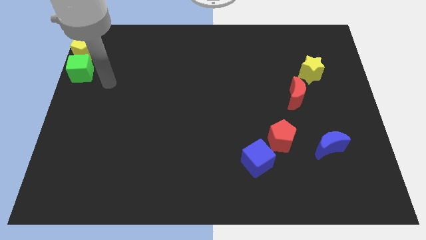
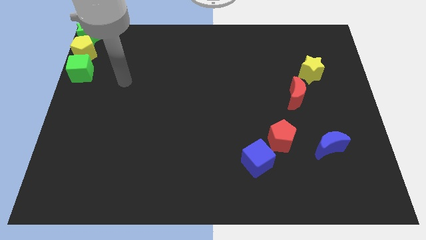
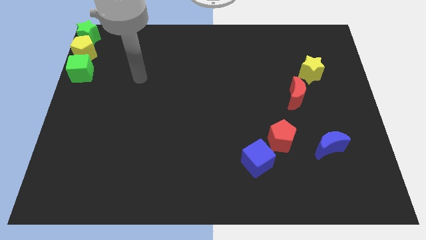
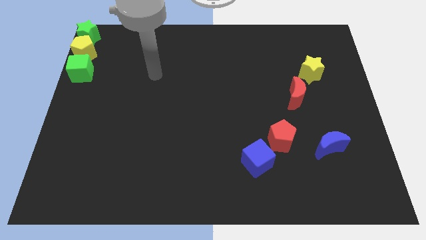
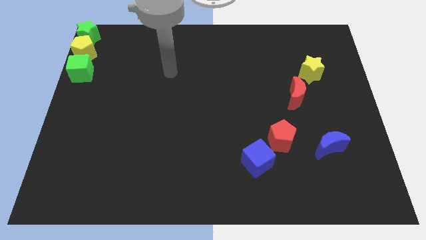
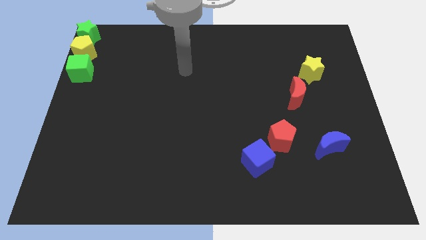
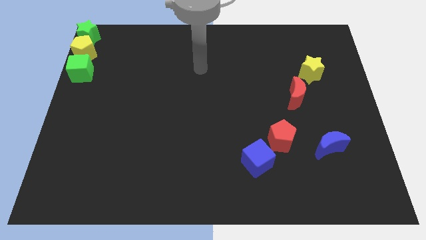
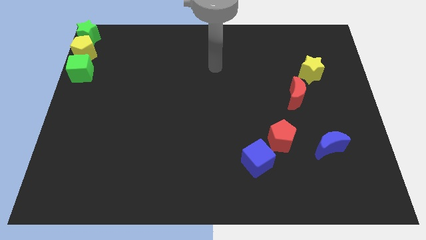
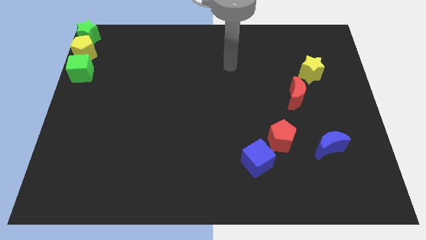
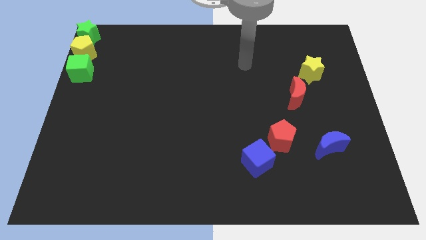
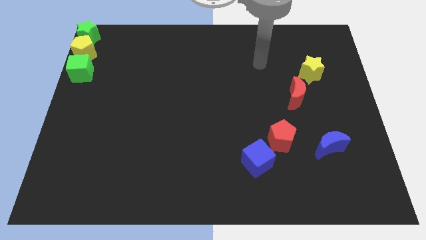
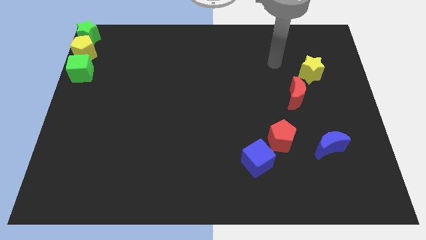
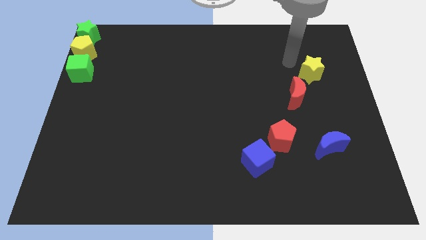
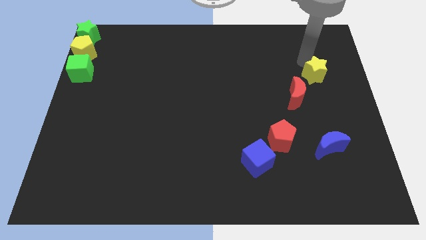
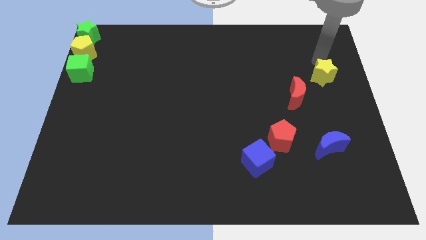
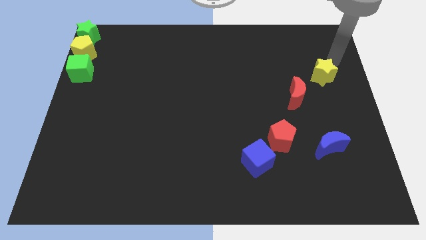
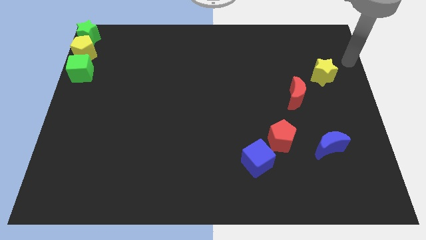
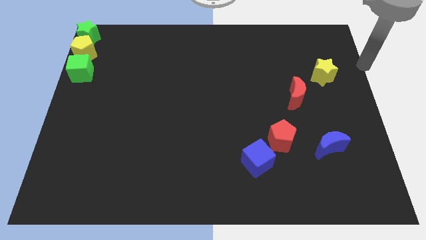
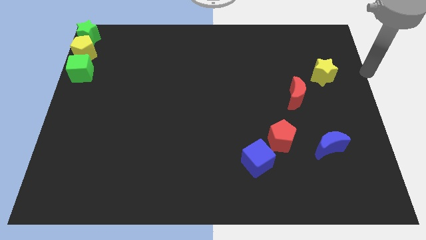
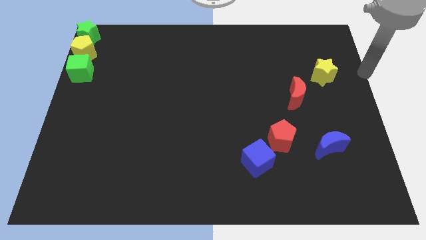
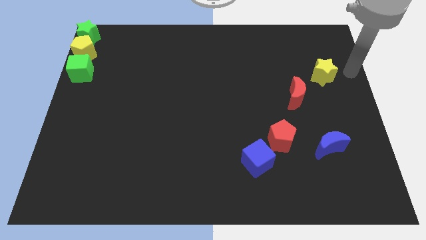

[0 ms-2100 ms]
slightly move the yellow star to the right side

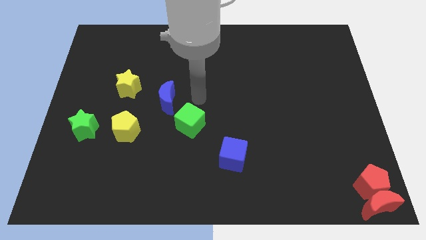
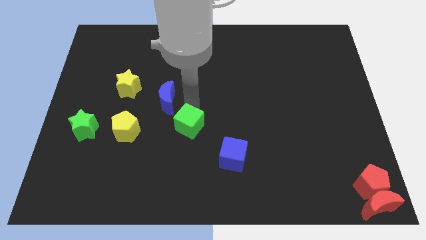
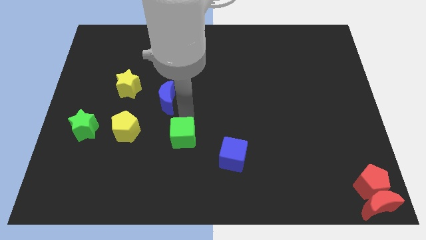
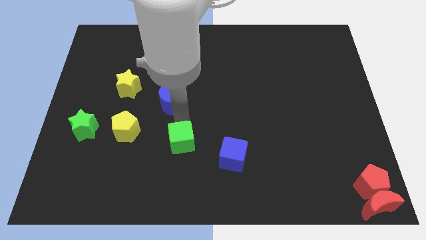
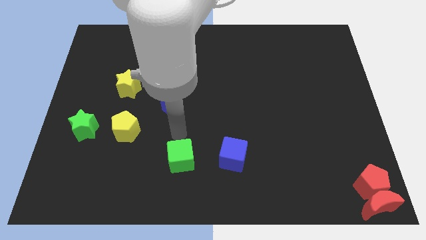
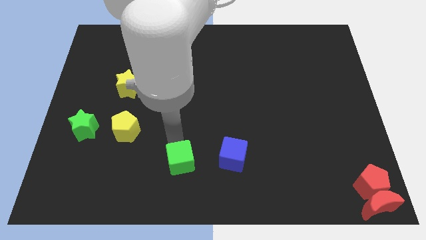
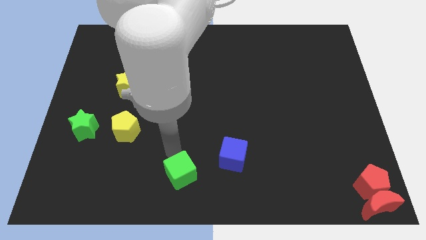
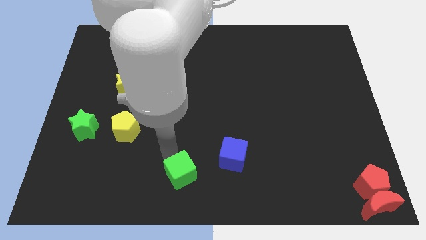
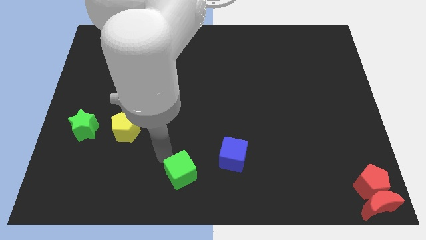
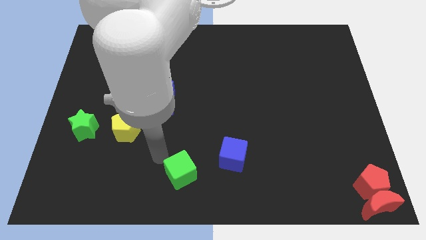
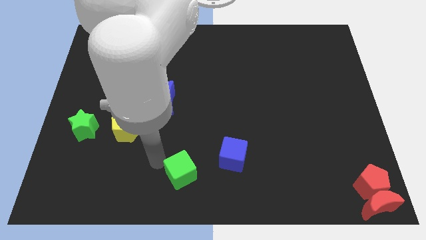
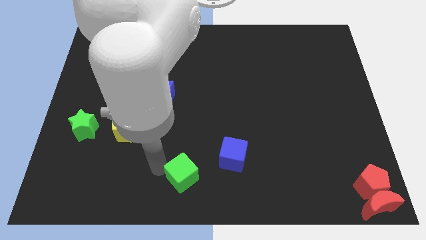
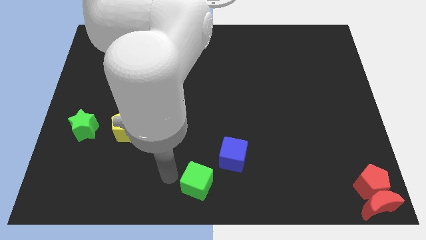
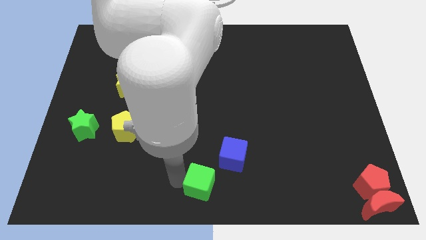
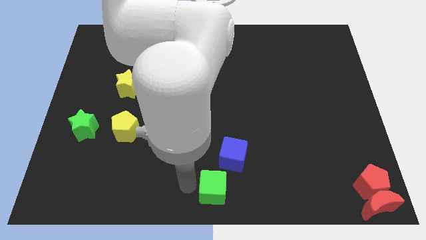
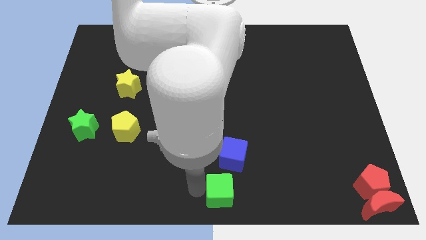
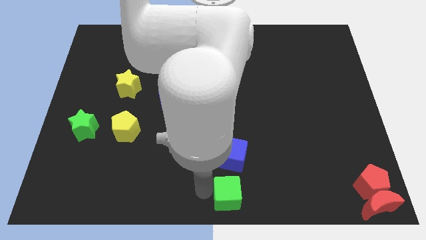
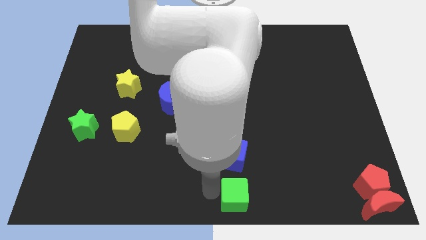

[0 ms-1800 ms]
move the green cube underneath the blue cube

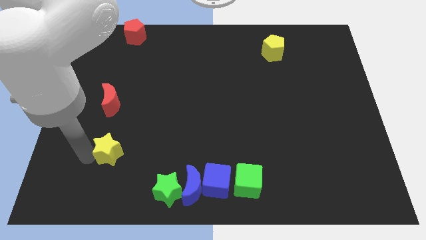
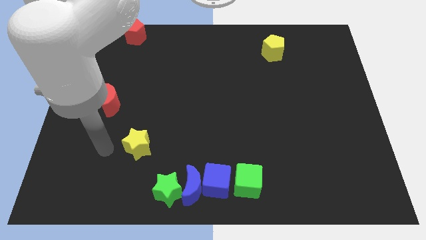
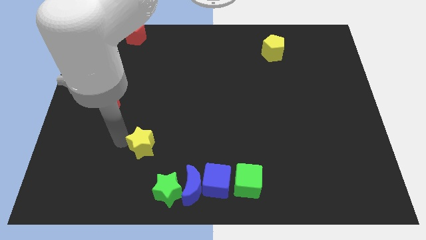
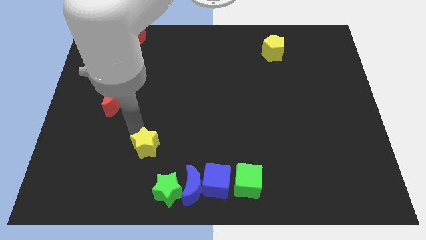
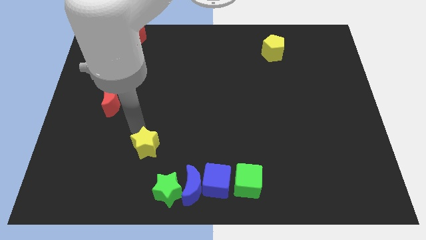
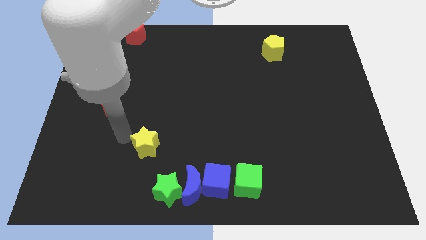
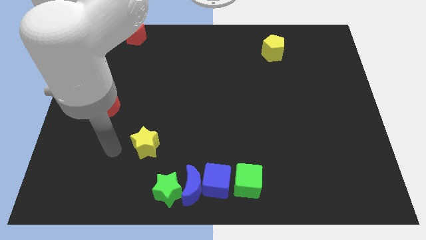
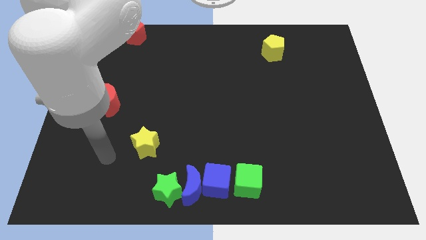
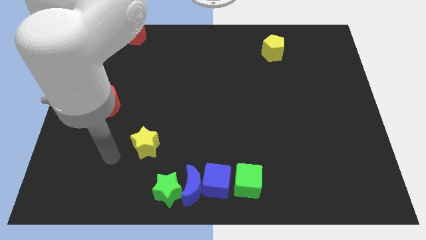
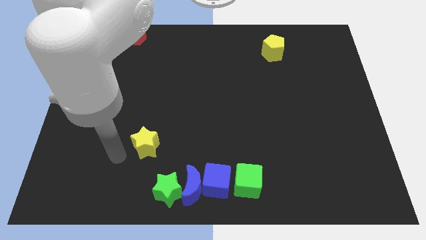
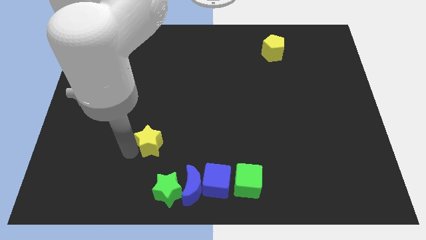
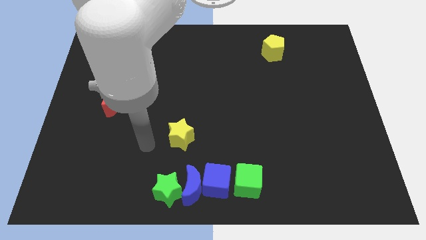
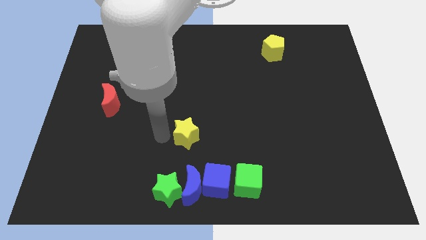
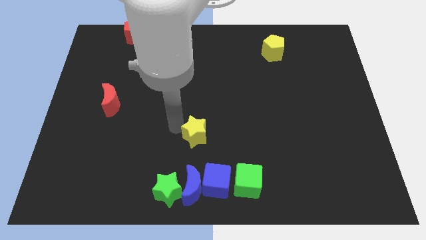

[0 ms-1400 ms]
place the yellow star above the blue moon

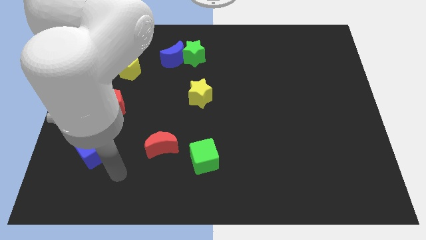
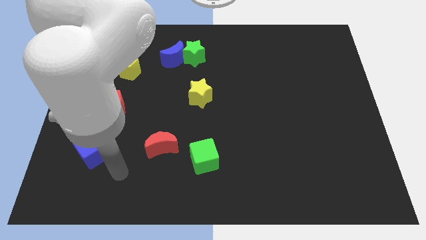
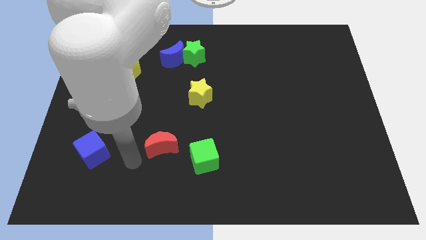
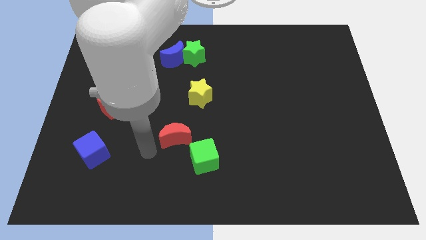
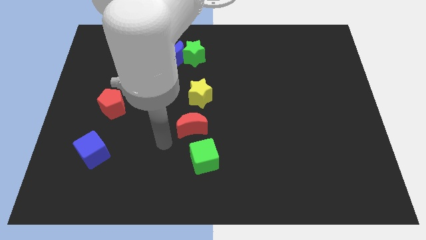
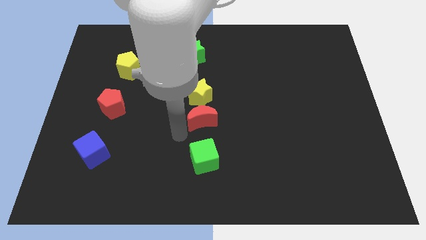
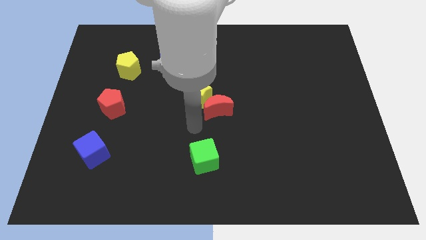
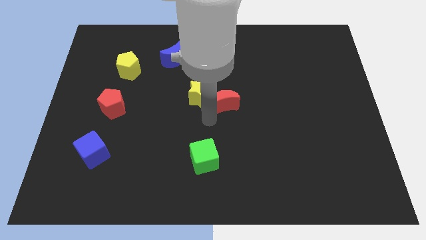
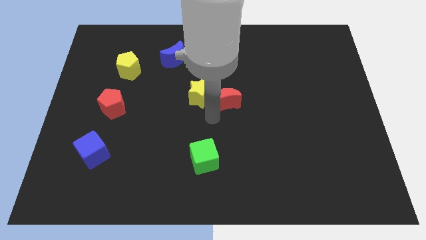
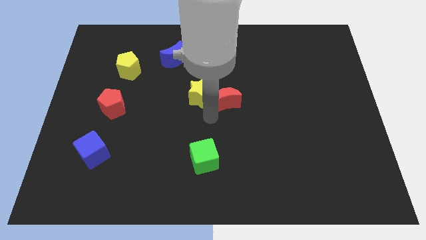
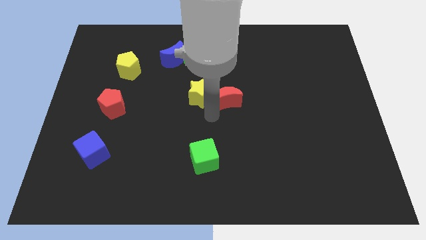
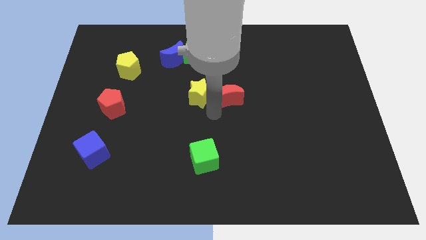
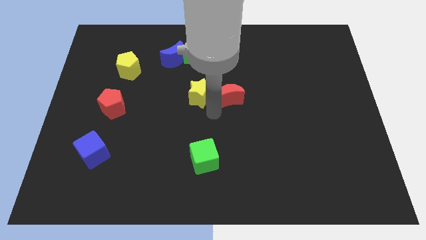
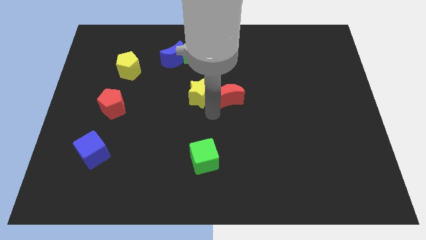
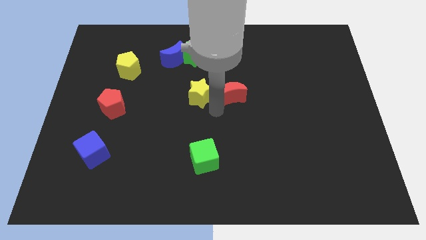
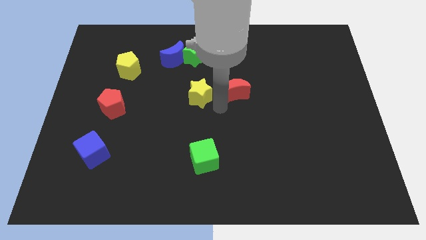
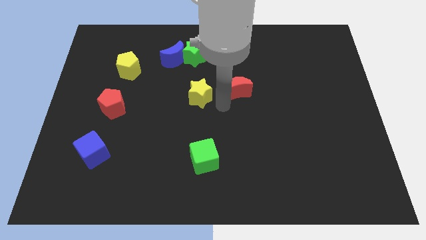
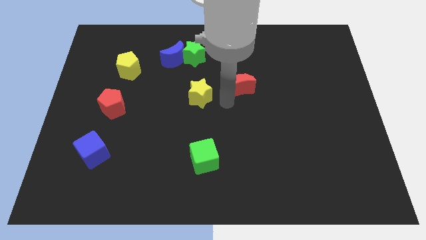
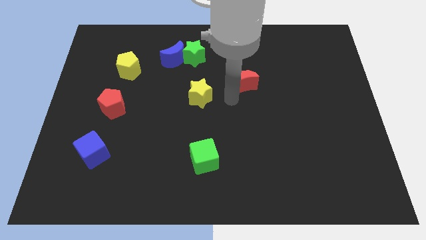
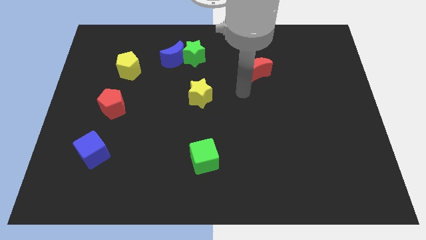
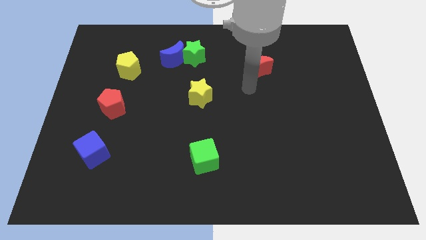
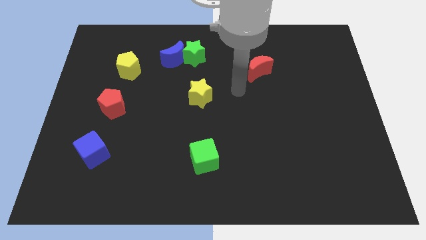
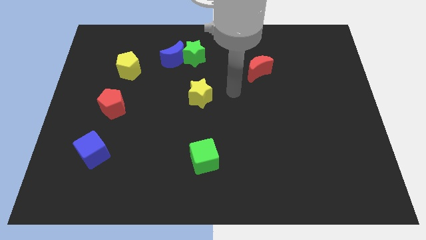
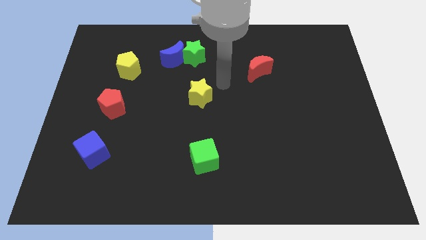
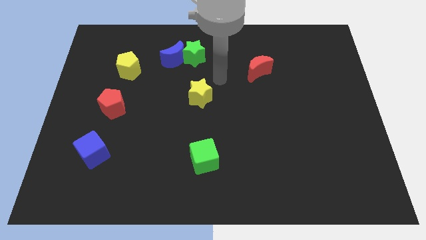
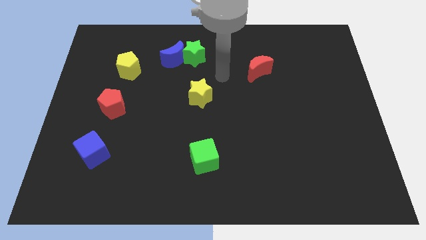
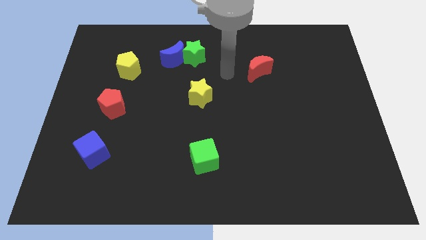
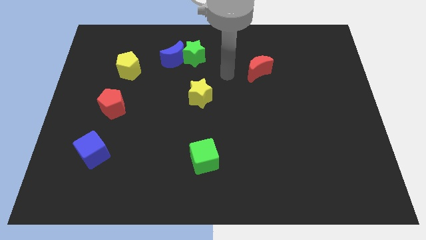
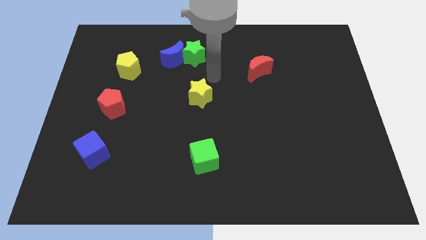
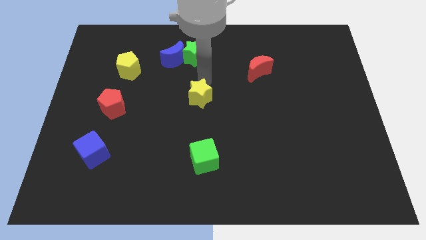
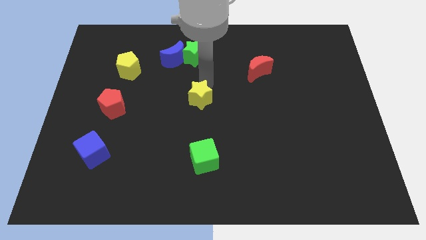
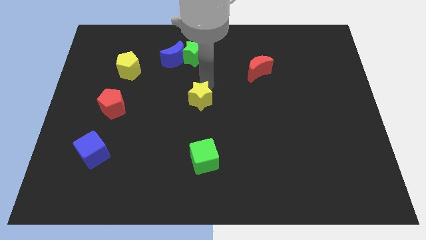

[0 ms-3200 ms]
push the red moon towards the top right

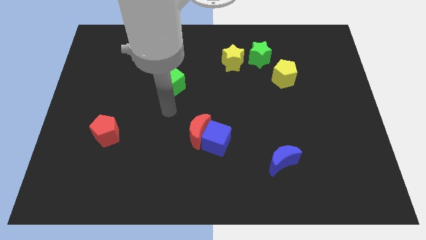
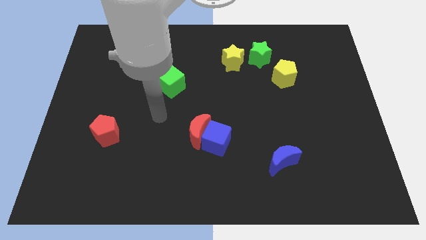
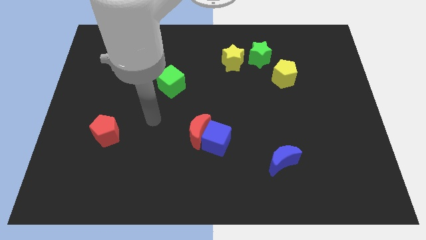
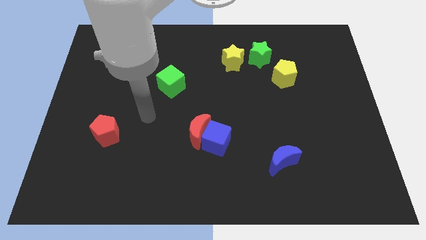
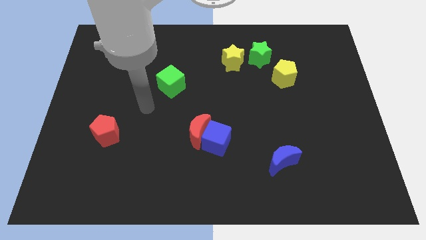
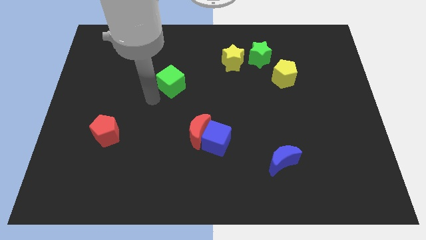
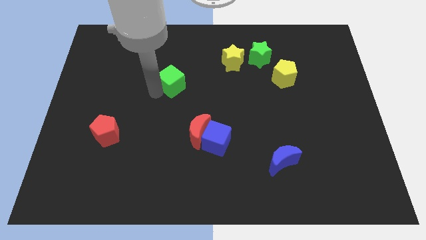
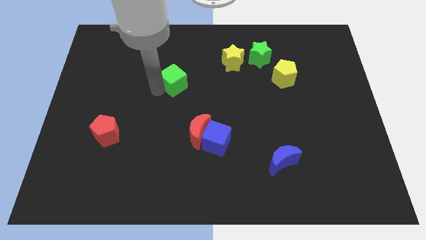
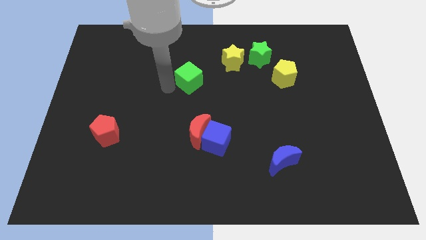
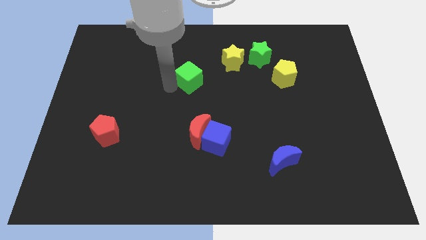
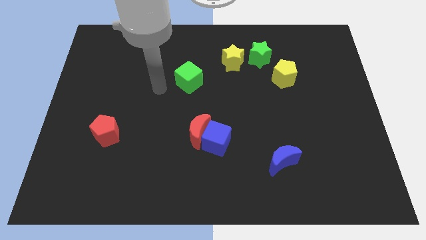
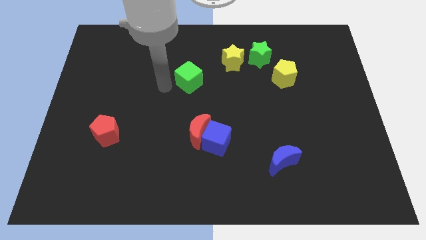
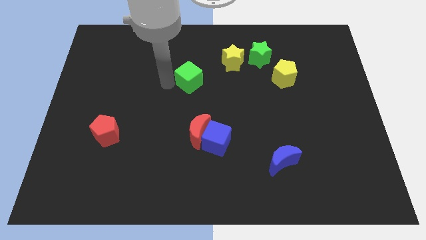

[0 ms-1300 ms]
push the green cube slightly towards the yellow star
